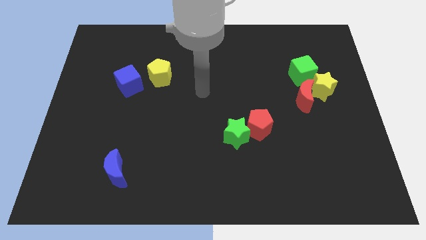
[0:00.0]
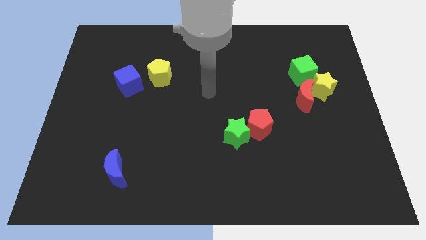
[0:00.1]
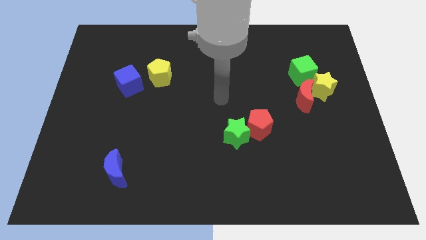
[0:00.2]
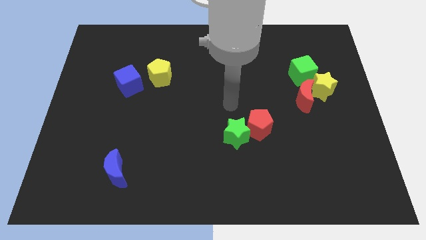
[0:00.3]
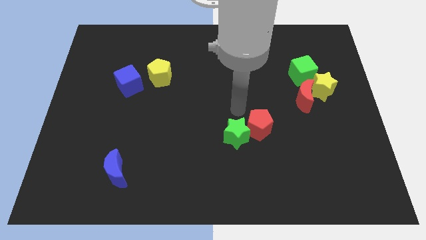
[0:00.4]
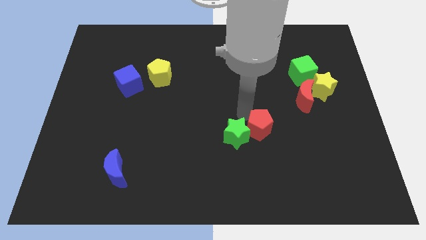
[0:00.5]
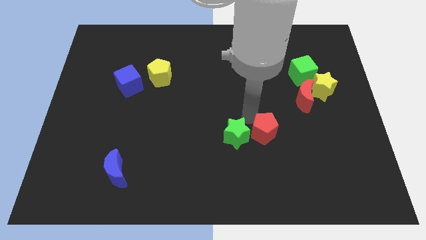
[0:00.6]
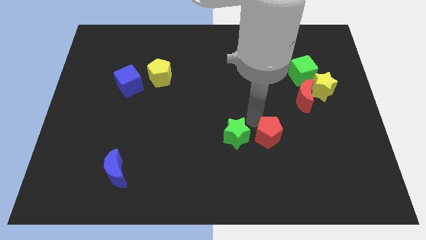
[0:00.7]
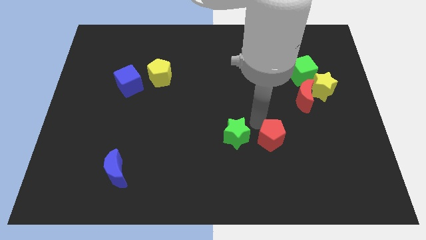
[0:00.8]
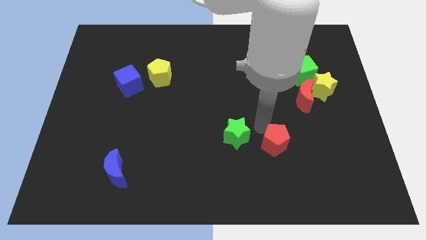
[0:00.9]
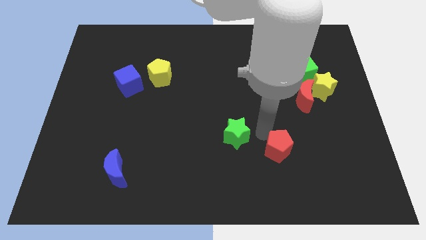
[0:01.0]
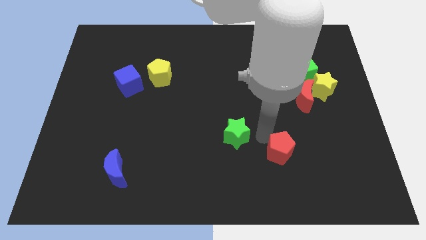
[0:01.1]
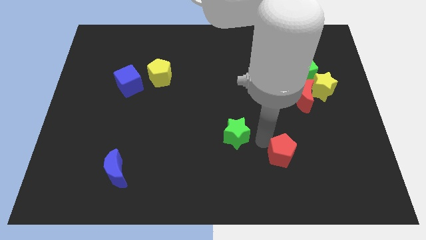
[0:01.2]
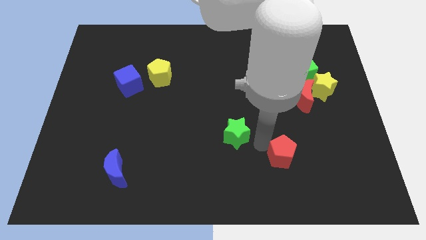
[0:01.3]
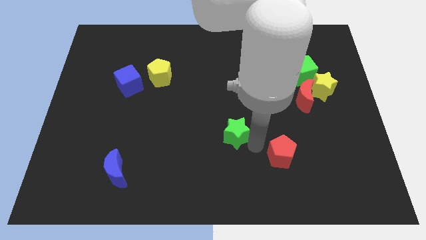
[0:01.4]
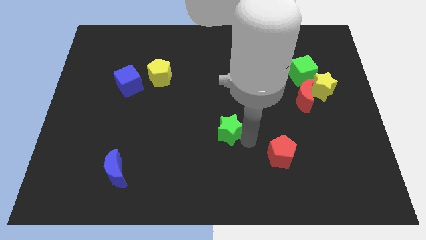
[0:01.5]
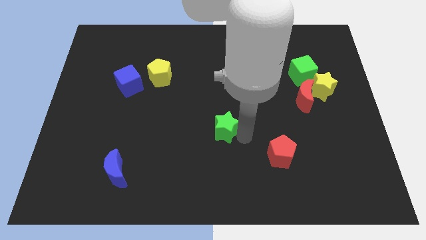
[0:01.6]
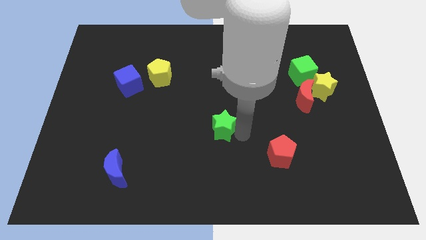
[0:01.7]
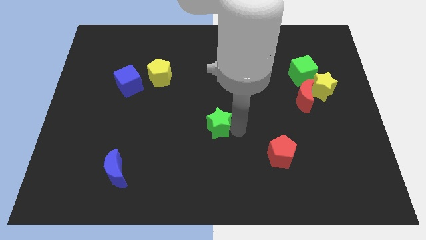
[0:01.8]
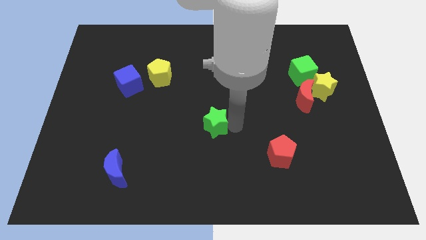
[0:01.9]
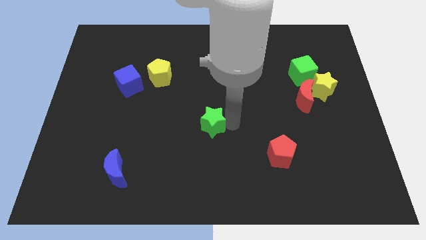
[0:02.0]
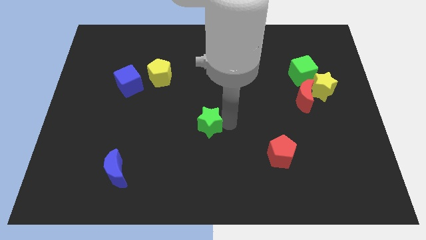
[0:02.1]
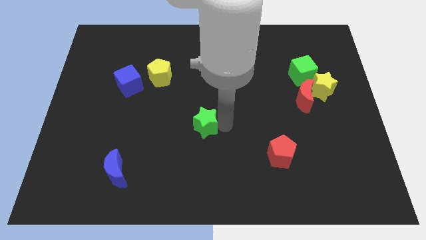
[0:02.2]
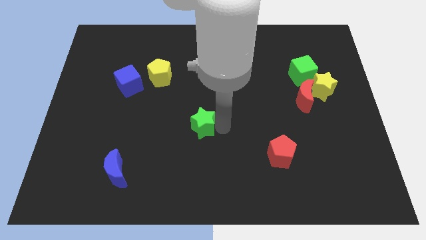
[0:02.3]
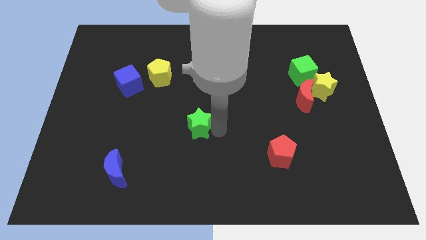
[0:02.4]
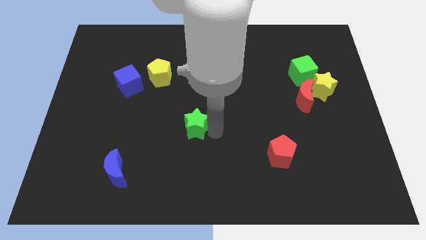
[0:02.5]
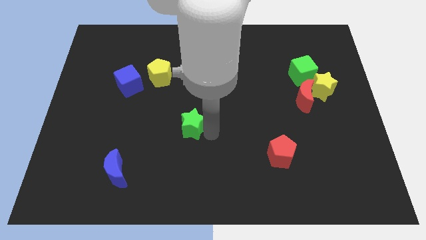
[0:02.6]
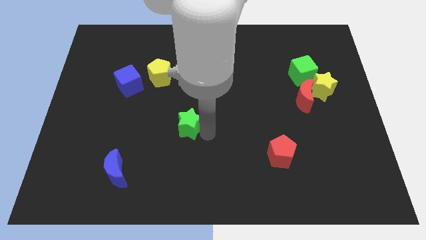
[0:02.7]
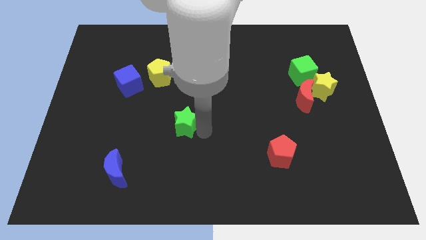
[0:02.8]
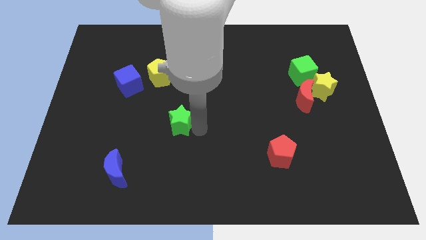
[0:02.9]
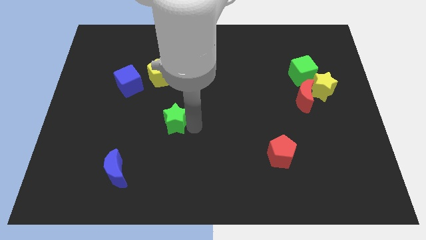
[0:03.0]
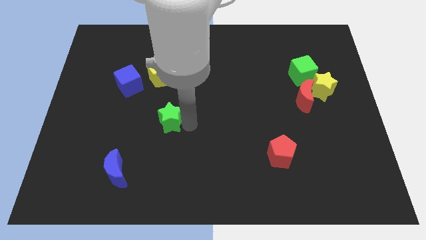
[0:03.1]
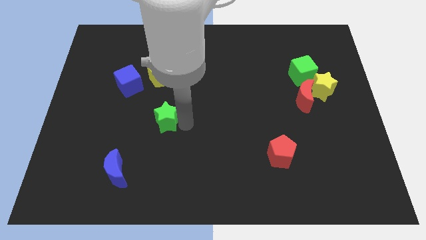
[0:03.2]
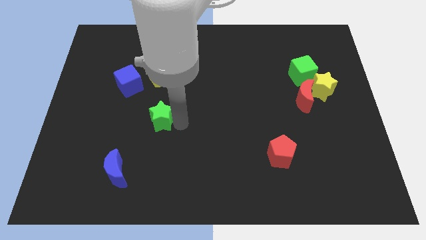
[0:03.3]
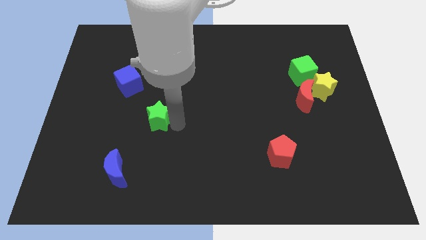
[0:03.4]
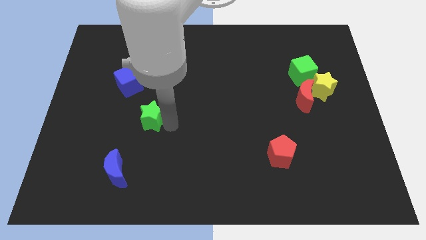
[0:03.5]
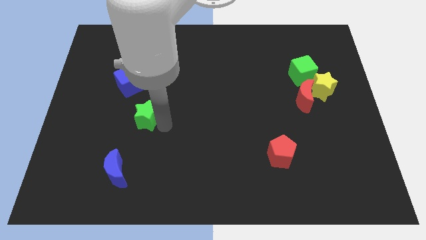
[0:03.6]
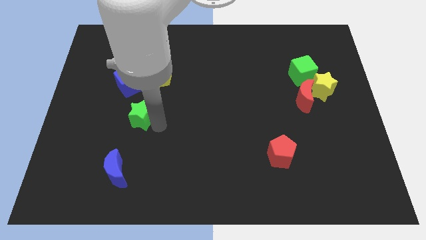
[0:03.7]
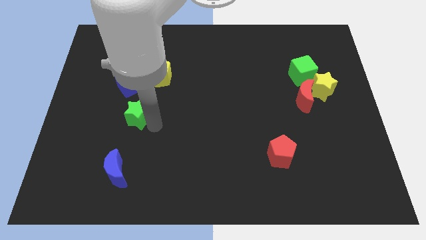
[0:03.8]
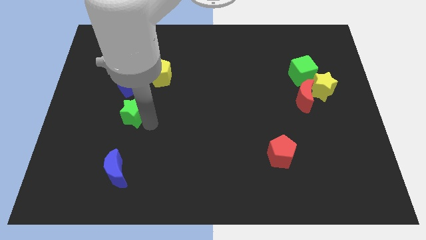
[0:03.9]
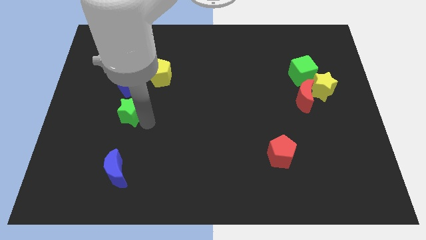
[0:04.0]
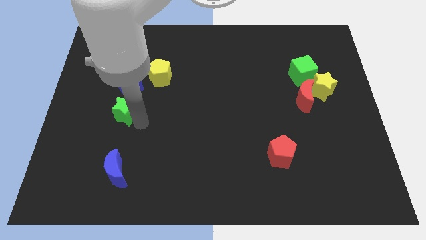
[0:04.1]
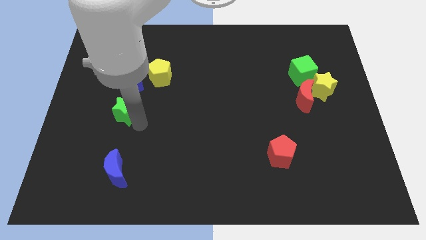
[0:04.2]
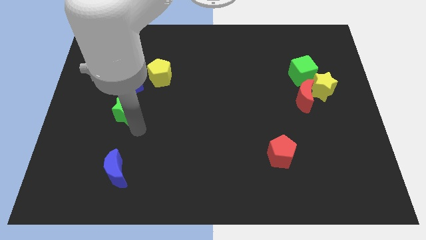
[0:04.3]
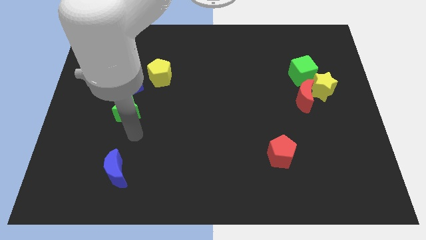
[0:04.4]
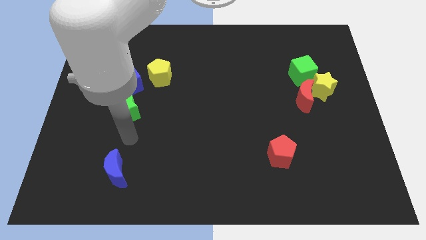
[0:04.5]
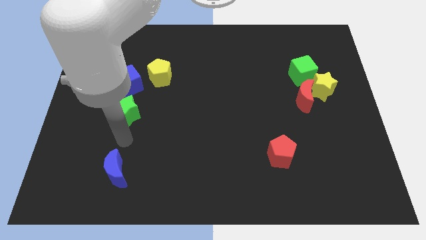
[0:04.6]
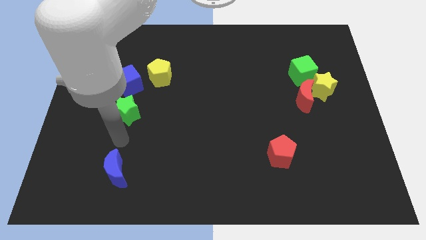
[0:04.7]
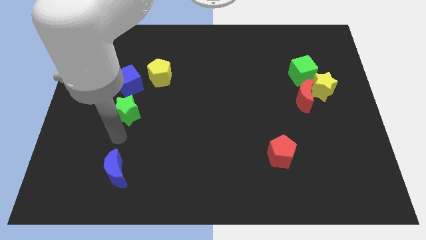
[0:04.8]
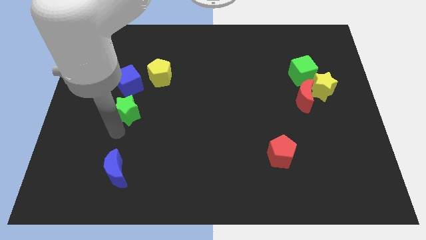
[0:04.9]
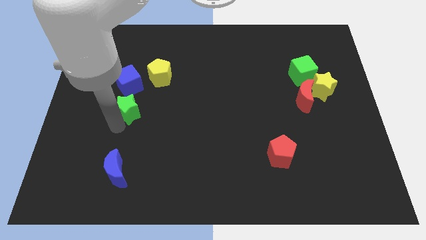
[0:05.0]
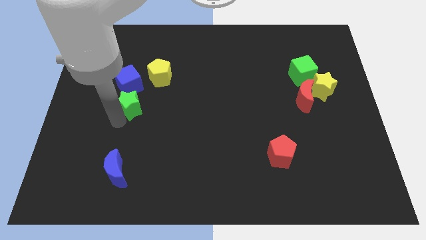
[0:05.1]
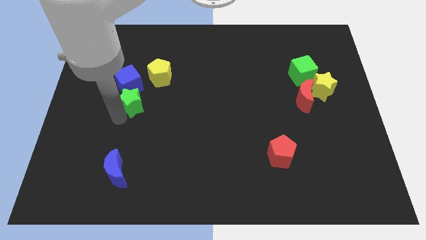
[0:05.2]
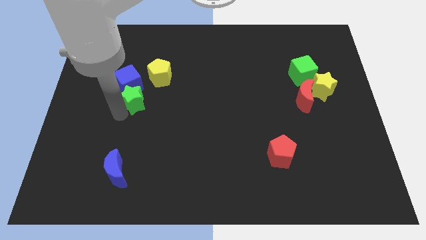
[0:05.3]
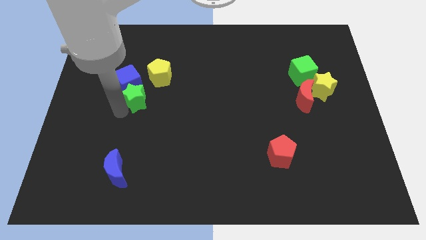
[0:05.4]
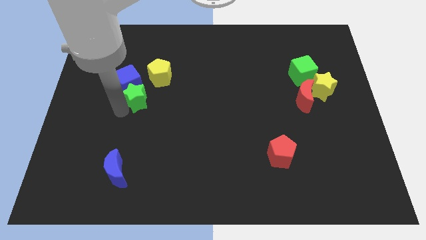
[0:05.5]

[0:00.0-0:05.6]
move the green star close to the blue cube

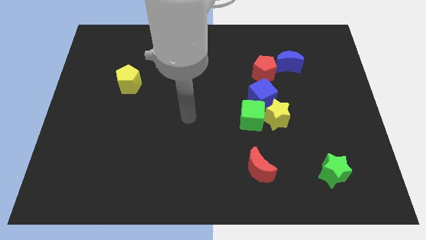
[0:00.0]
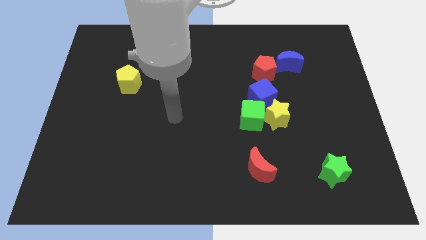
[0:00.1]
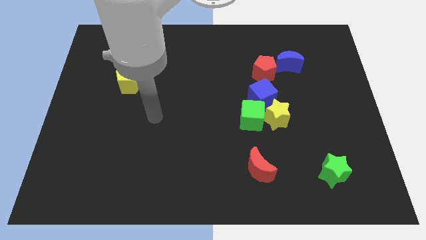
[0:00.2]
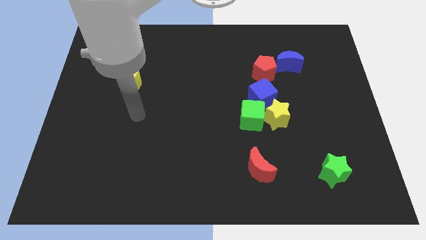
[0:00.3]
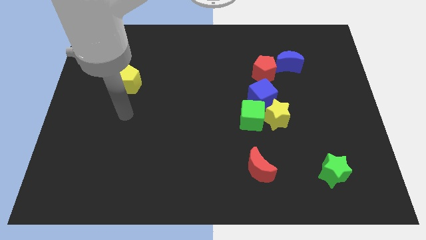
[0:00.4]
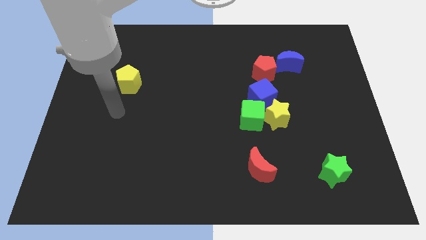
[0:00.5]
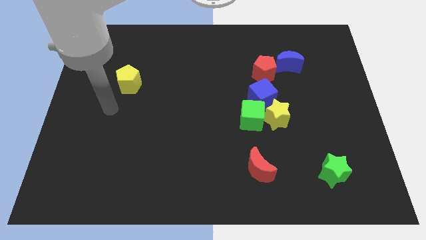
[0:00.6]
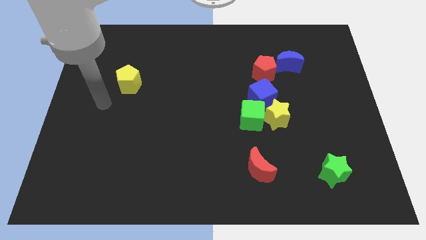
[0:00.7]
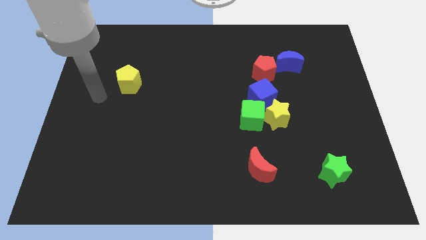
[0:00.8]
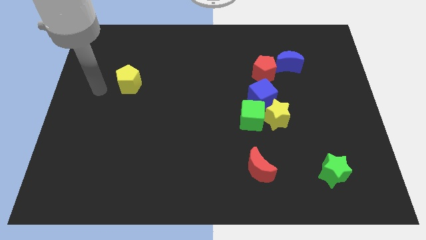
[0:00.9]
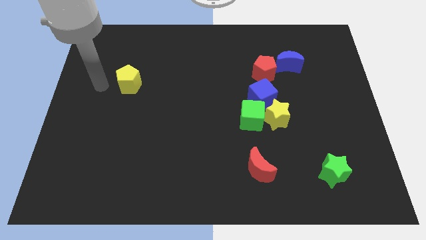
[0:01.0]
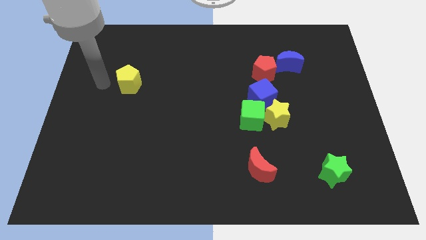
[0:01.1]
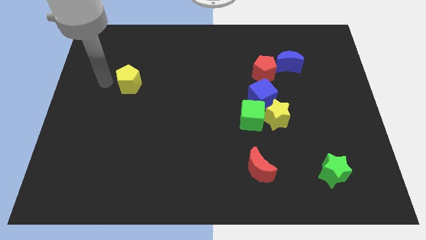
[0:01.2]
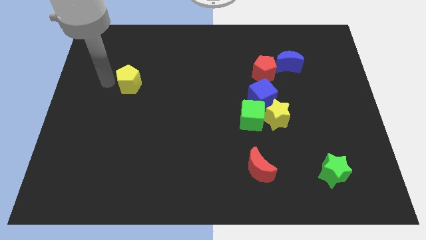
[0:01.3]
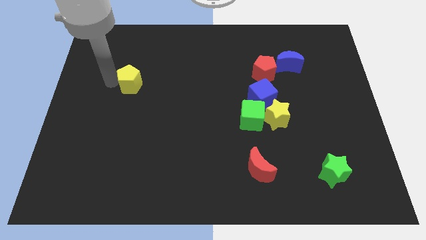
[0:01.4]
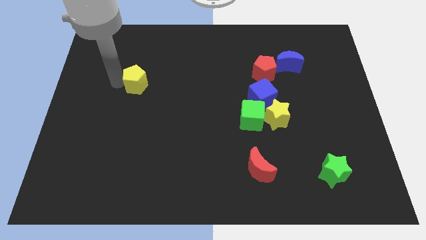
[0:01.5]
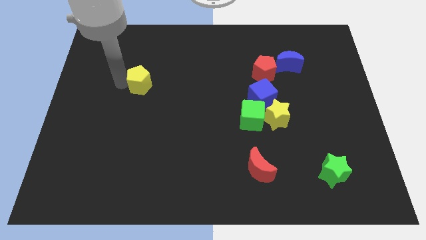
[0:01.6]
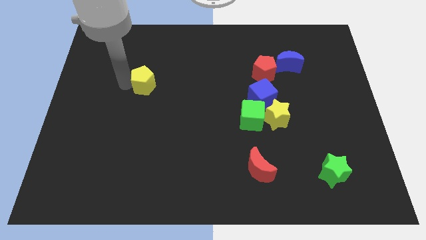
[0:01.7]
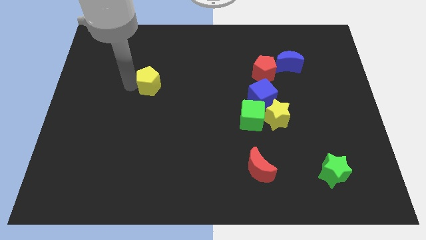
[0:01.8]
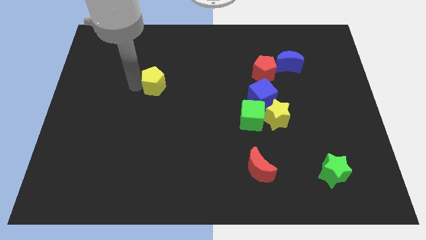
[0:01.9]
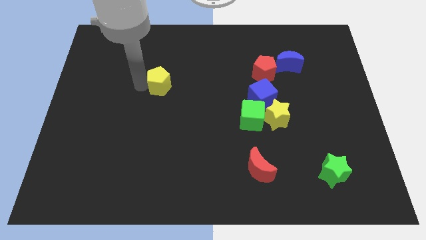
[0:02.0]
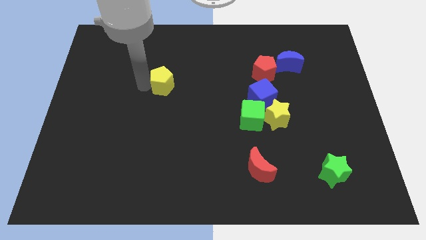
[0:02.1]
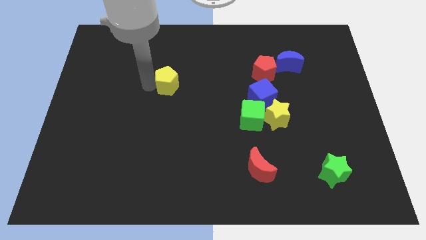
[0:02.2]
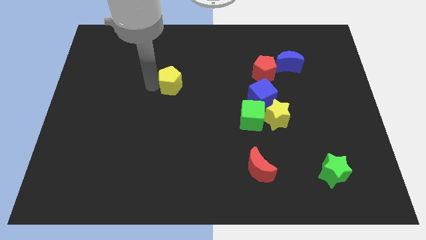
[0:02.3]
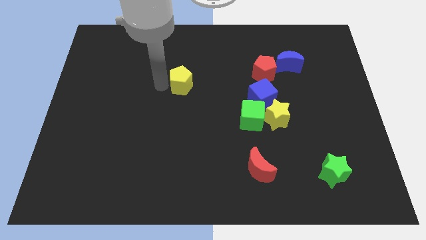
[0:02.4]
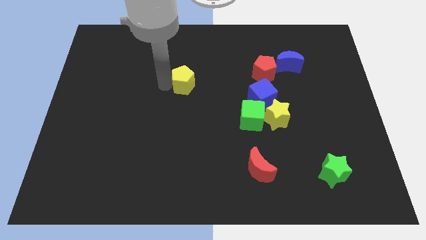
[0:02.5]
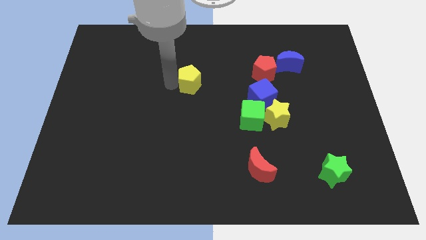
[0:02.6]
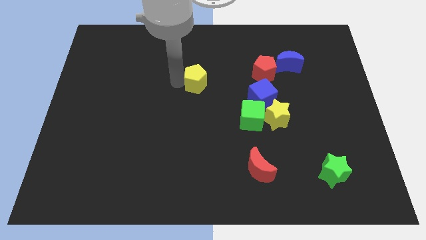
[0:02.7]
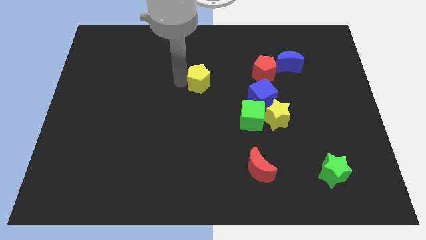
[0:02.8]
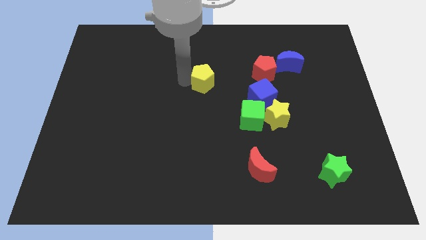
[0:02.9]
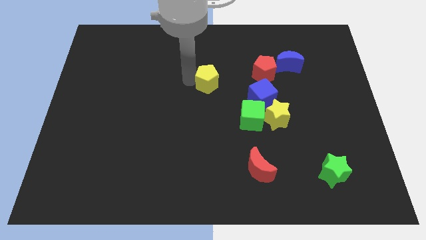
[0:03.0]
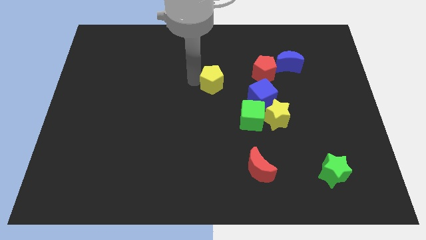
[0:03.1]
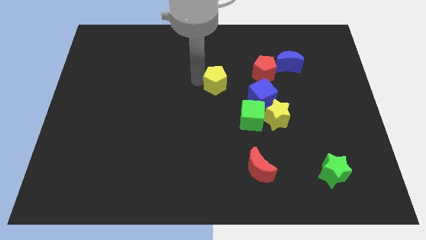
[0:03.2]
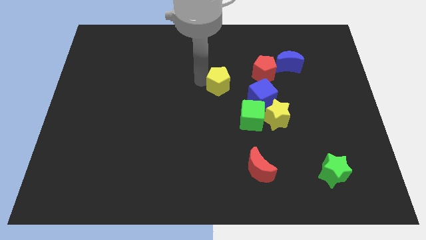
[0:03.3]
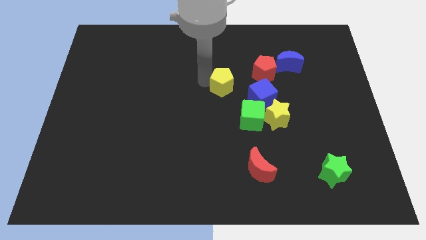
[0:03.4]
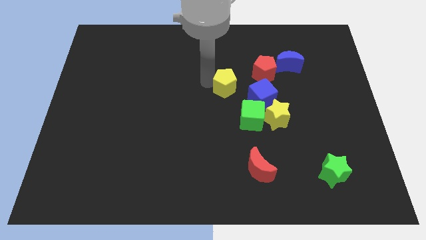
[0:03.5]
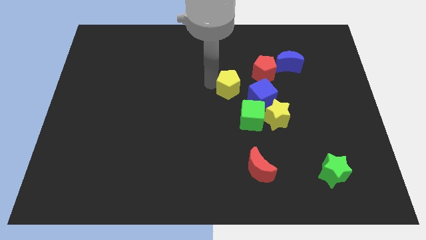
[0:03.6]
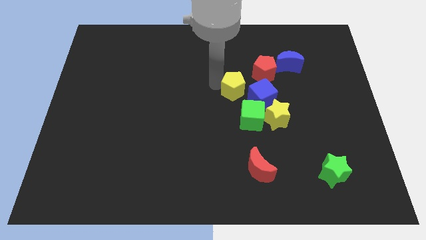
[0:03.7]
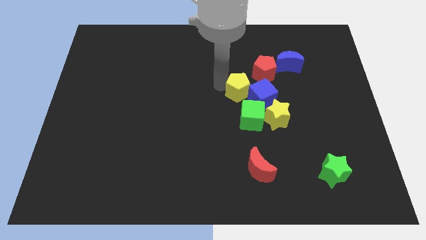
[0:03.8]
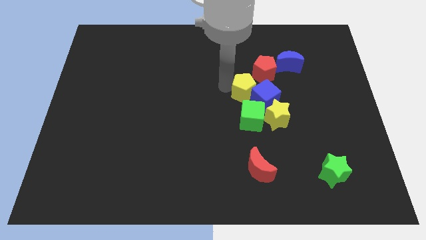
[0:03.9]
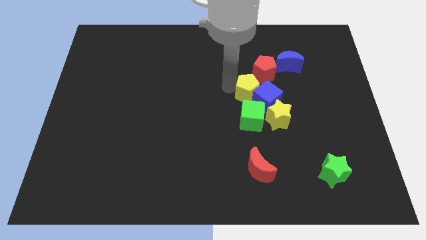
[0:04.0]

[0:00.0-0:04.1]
slide the yellow pentagon close to the blue cube
